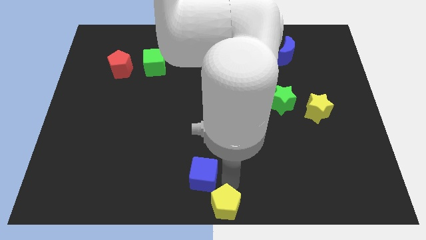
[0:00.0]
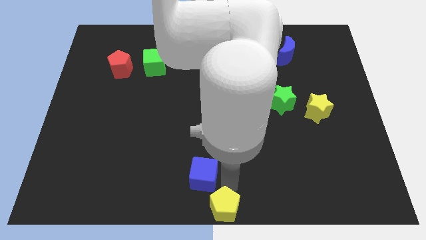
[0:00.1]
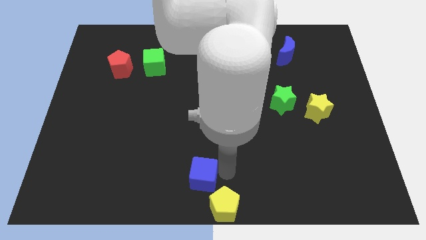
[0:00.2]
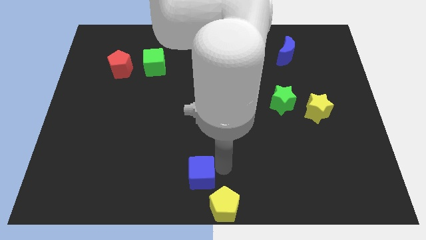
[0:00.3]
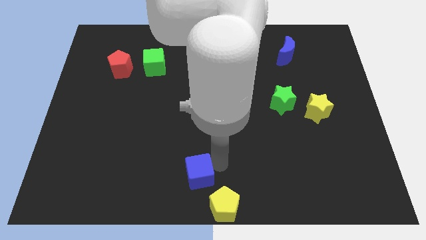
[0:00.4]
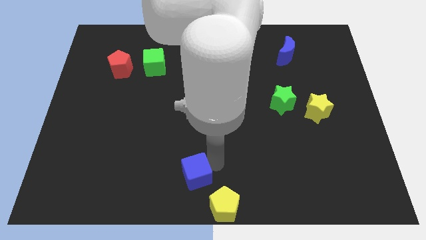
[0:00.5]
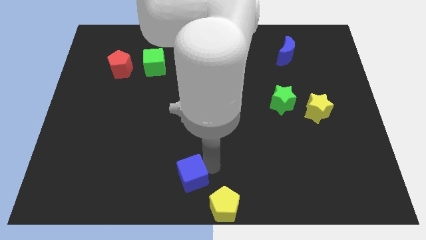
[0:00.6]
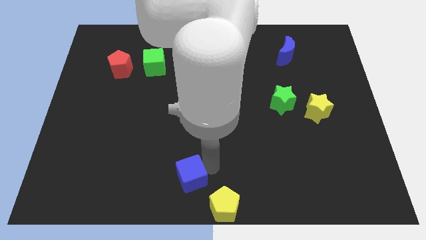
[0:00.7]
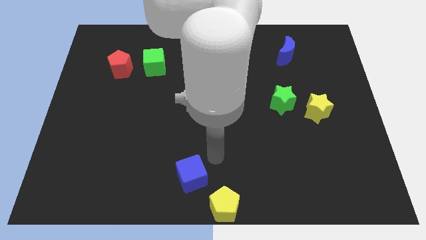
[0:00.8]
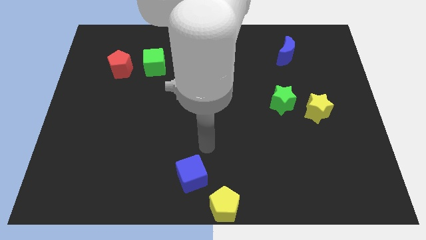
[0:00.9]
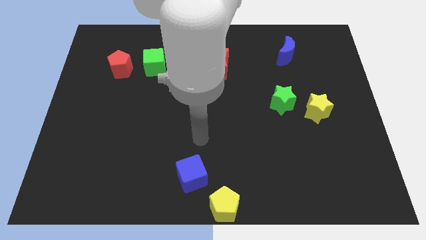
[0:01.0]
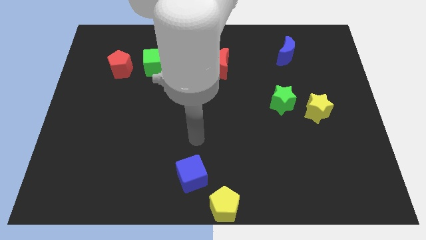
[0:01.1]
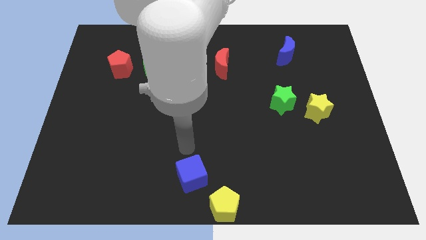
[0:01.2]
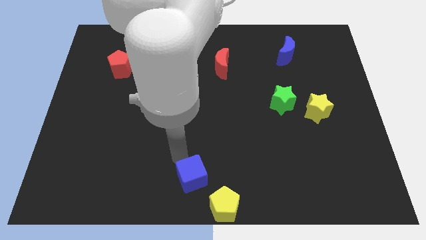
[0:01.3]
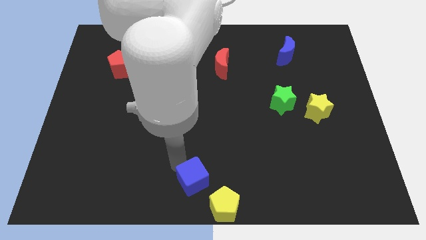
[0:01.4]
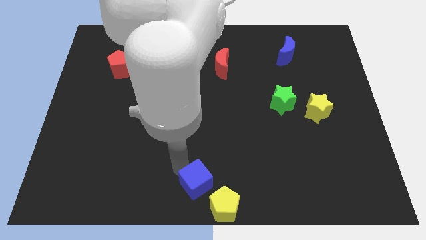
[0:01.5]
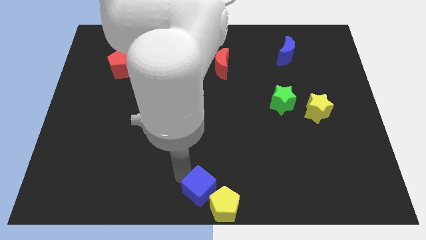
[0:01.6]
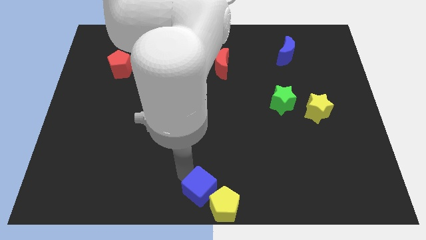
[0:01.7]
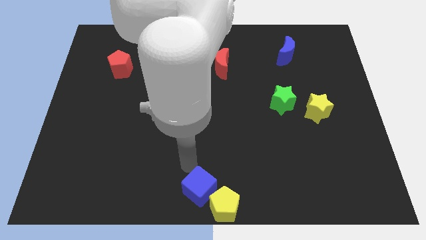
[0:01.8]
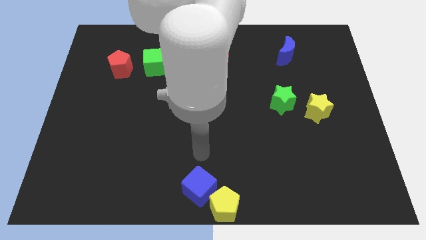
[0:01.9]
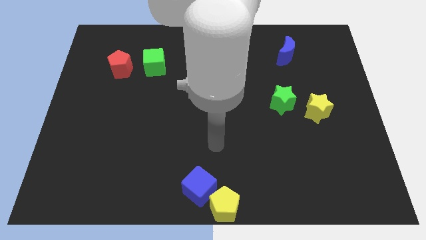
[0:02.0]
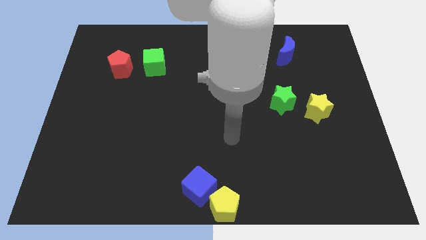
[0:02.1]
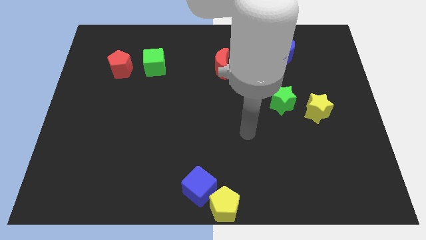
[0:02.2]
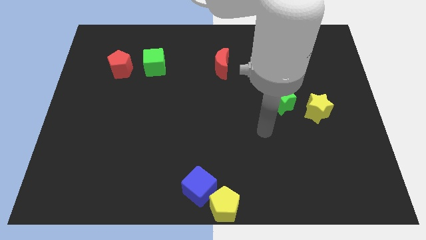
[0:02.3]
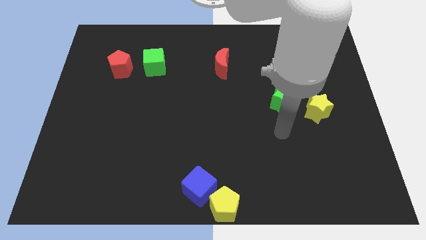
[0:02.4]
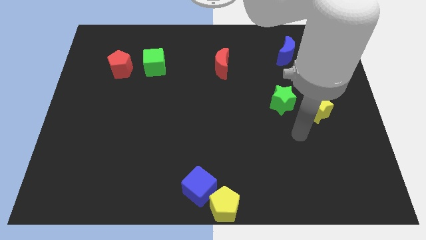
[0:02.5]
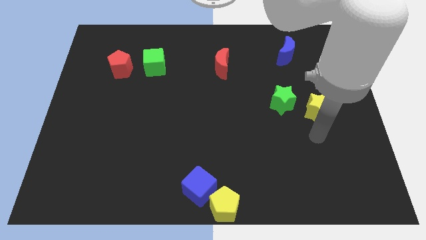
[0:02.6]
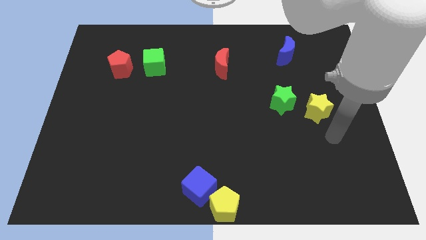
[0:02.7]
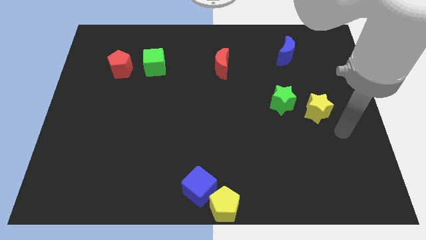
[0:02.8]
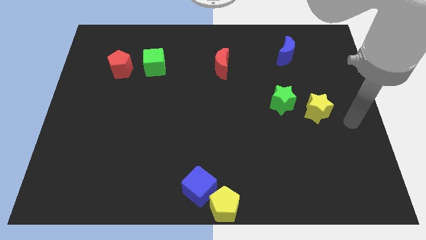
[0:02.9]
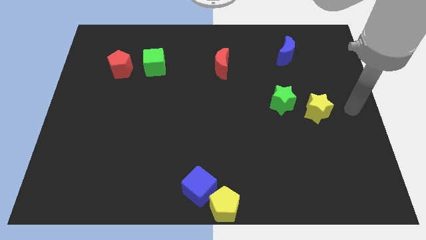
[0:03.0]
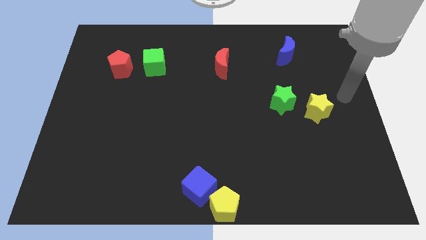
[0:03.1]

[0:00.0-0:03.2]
place your hand at the center right

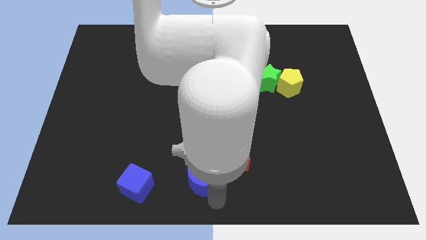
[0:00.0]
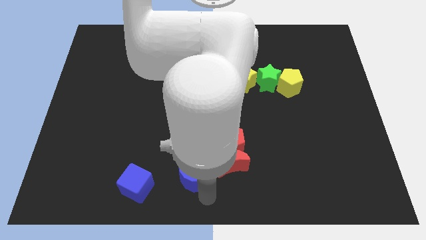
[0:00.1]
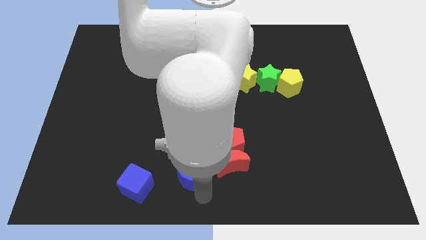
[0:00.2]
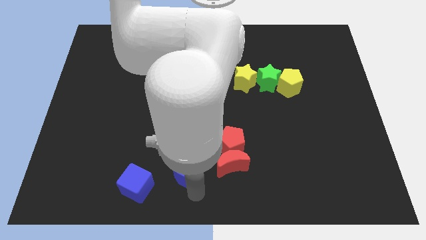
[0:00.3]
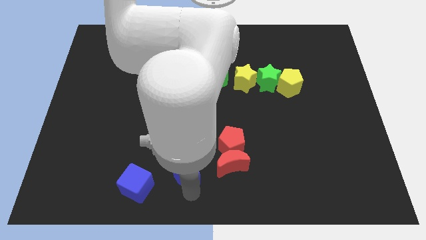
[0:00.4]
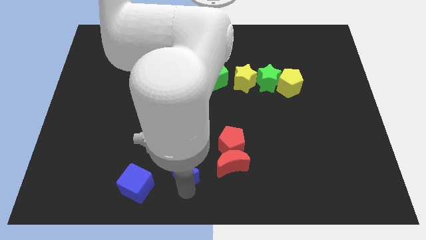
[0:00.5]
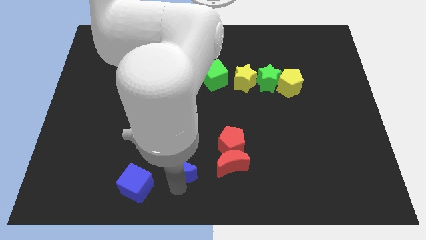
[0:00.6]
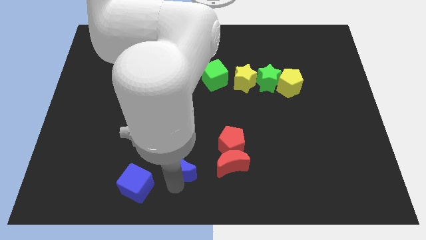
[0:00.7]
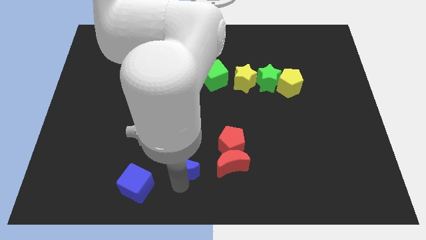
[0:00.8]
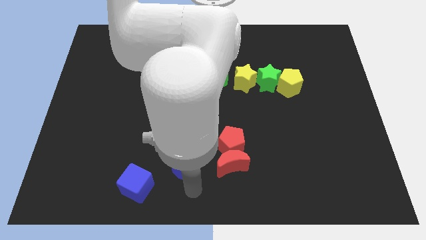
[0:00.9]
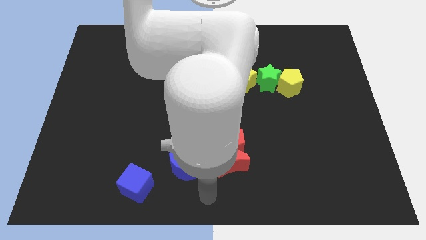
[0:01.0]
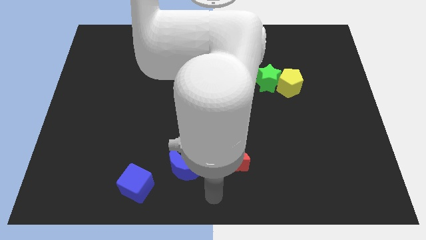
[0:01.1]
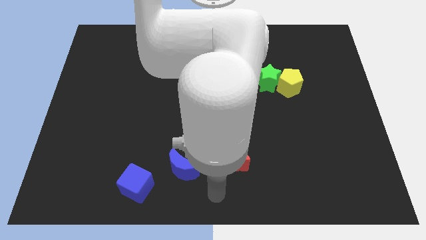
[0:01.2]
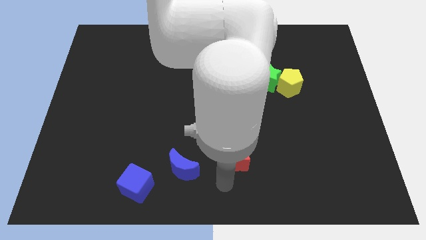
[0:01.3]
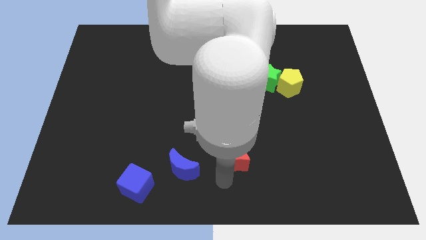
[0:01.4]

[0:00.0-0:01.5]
move the blue crescent to the left

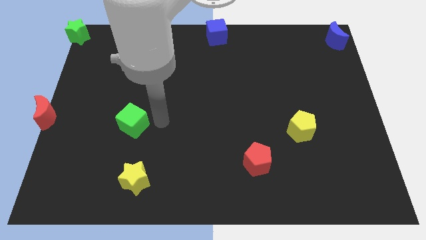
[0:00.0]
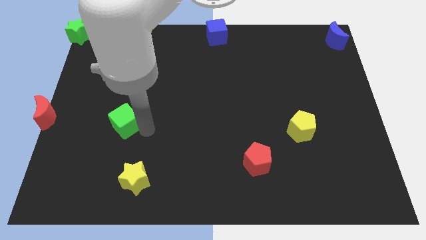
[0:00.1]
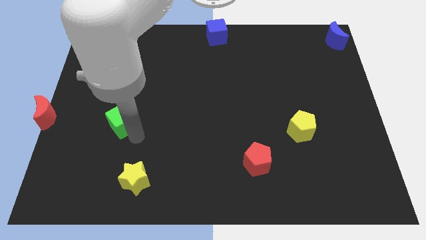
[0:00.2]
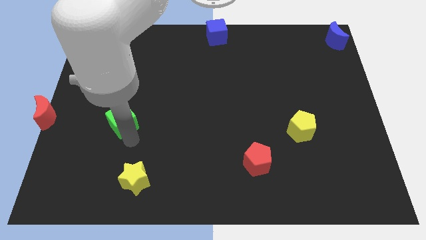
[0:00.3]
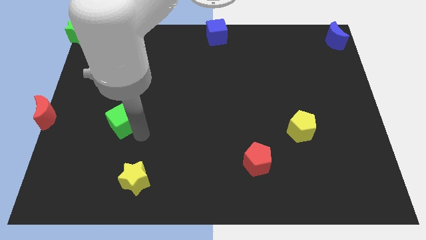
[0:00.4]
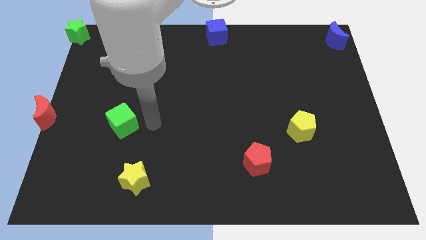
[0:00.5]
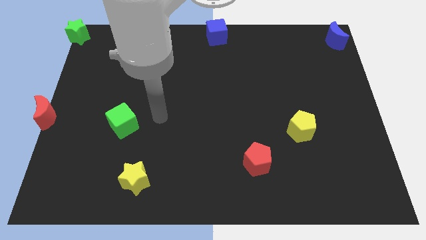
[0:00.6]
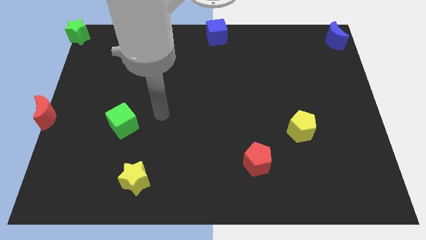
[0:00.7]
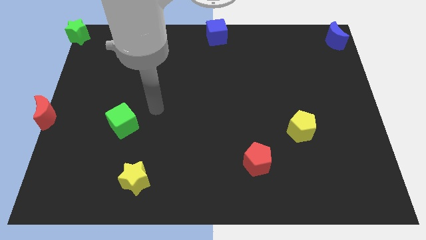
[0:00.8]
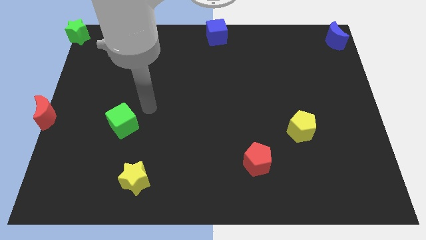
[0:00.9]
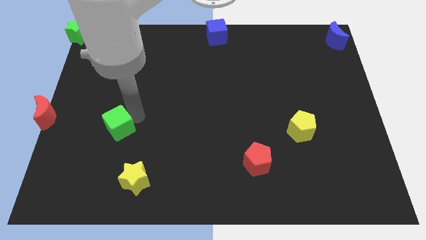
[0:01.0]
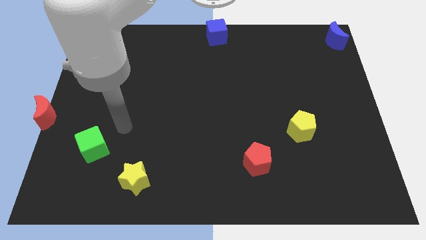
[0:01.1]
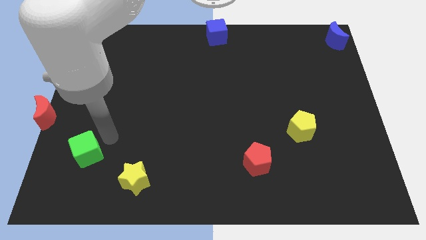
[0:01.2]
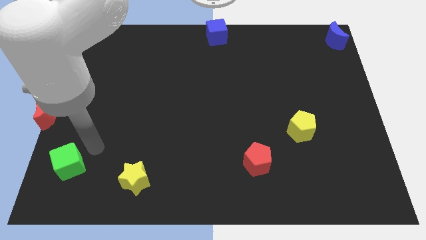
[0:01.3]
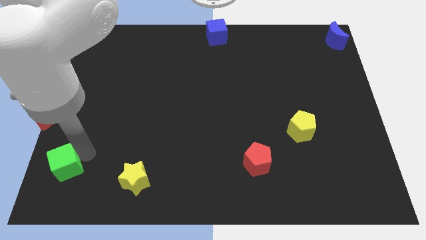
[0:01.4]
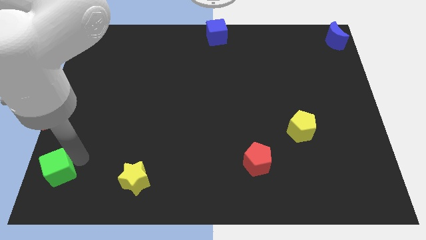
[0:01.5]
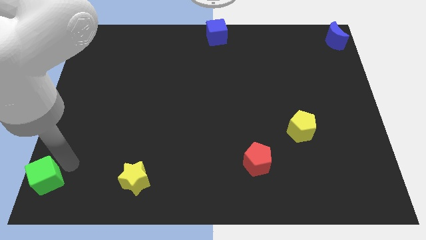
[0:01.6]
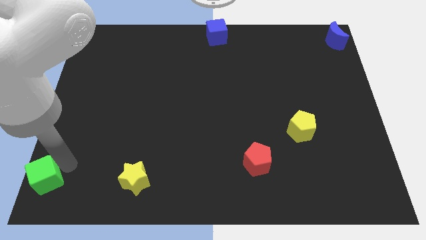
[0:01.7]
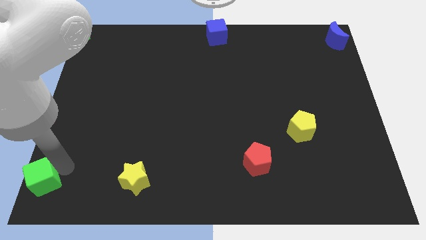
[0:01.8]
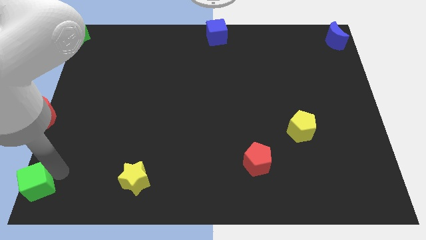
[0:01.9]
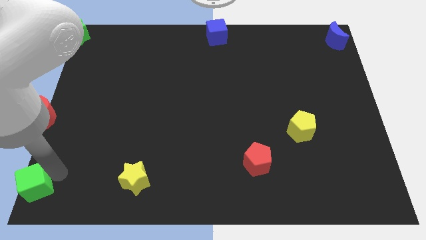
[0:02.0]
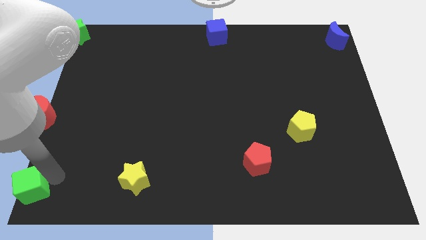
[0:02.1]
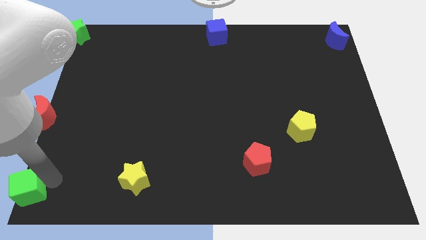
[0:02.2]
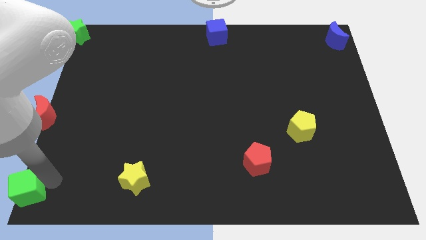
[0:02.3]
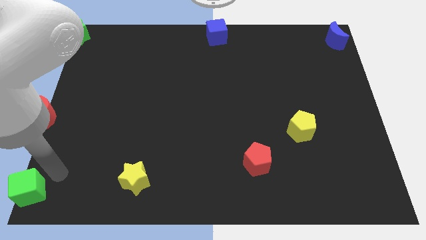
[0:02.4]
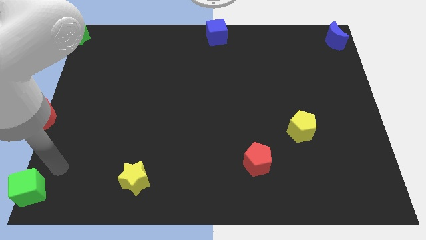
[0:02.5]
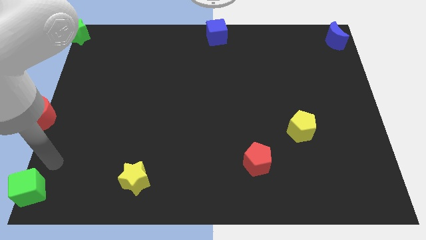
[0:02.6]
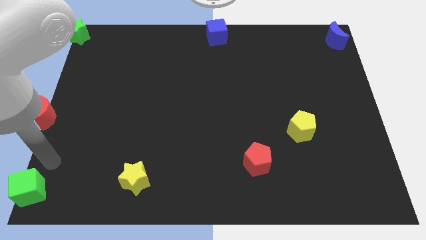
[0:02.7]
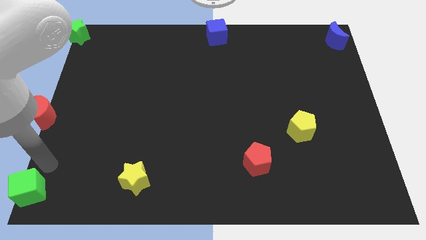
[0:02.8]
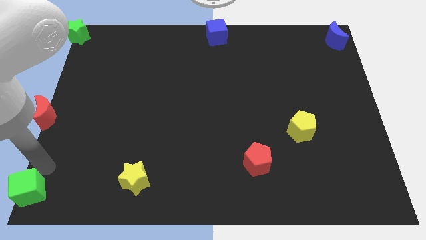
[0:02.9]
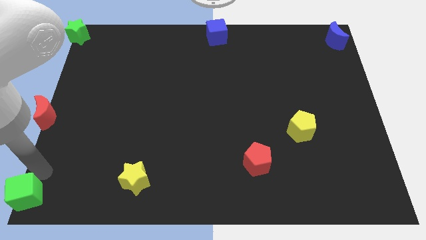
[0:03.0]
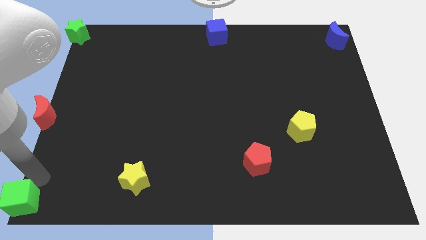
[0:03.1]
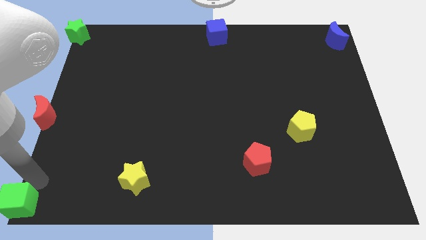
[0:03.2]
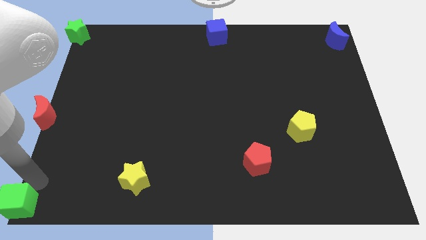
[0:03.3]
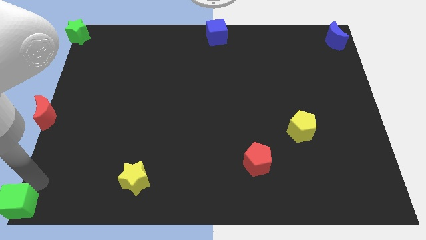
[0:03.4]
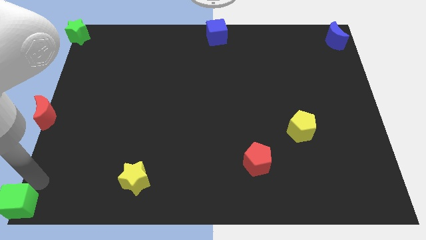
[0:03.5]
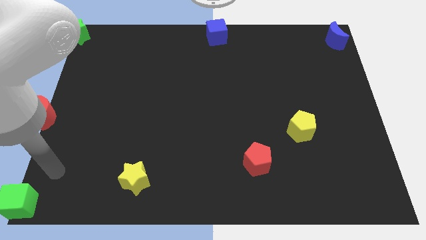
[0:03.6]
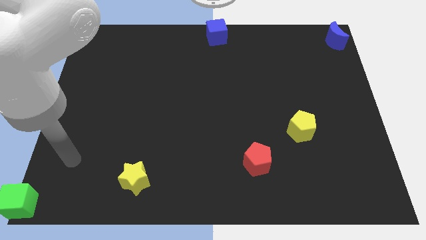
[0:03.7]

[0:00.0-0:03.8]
move the green cube to the bottom left corner

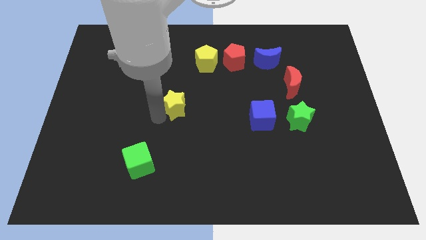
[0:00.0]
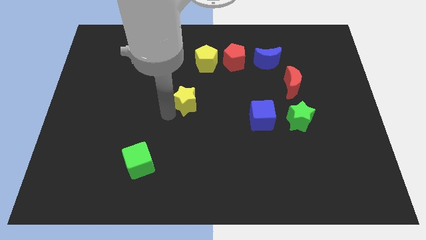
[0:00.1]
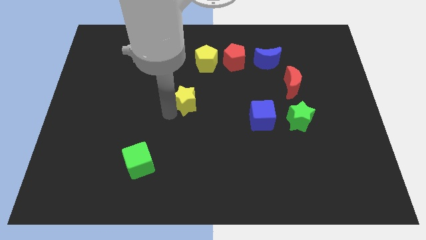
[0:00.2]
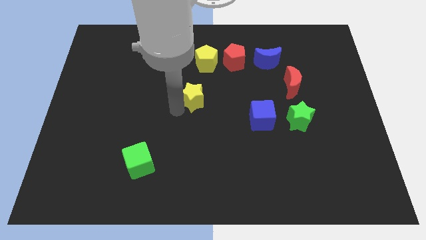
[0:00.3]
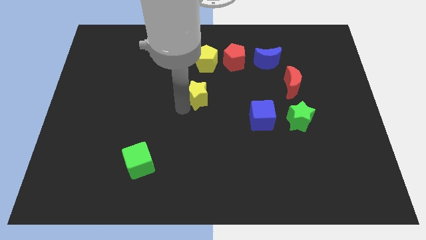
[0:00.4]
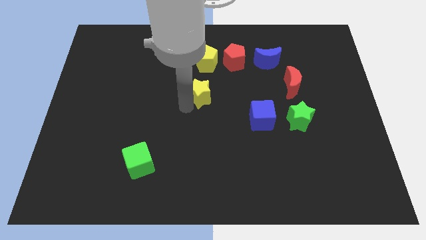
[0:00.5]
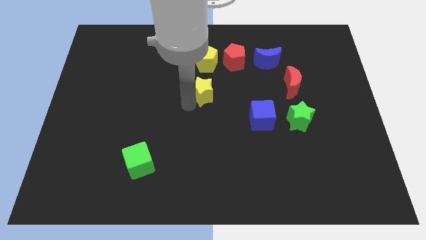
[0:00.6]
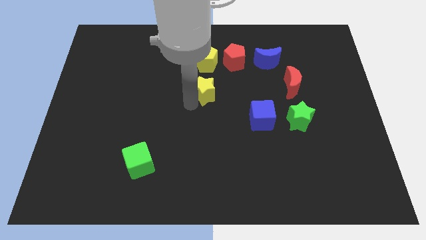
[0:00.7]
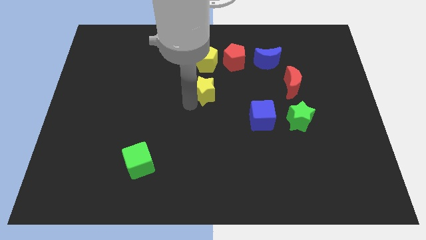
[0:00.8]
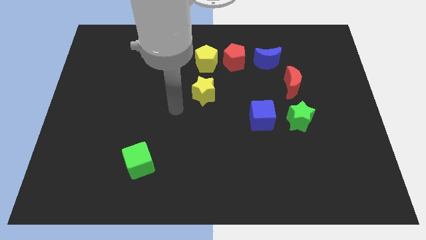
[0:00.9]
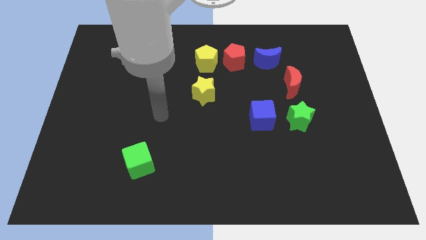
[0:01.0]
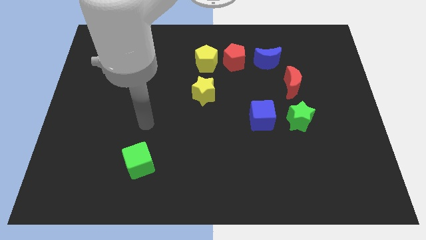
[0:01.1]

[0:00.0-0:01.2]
move yellow star bottom the yellow pentagon
